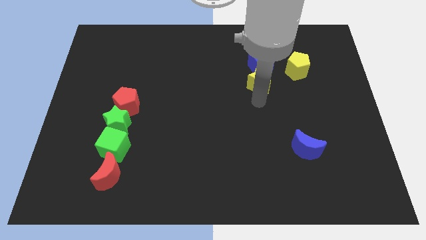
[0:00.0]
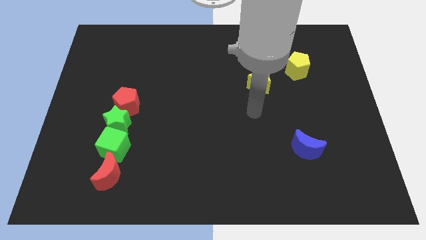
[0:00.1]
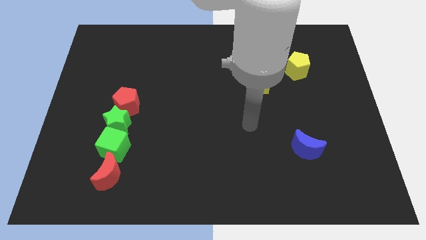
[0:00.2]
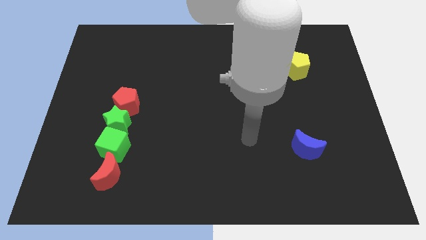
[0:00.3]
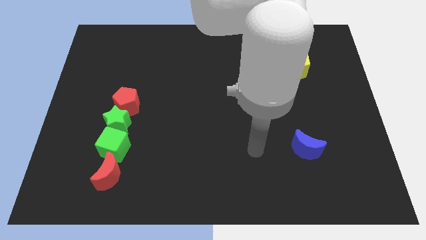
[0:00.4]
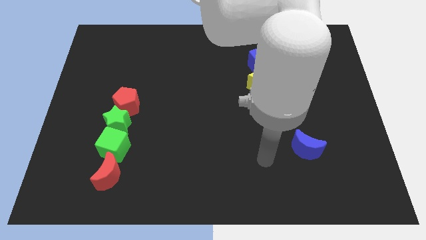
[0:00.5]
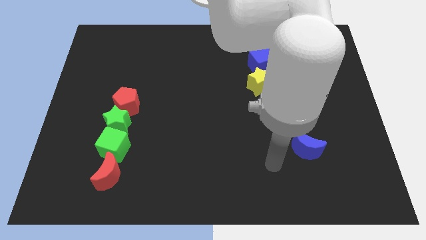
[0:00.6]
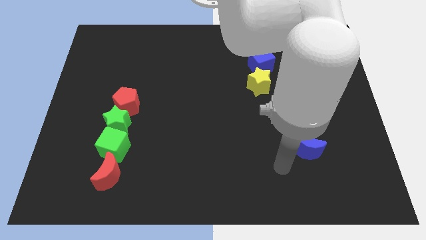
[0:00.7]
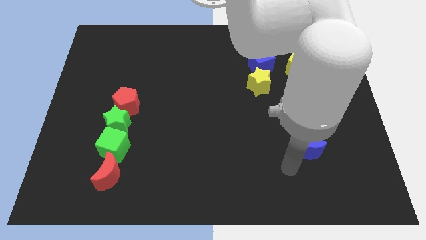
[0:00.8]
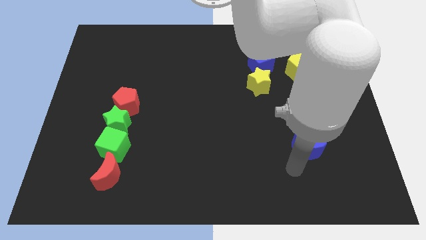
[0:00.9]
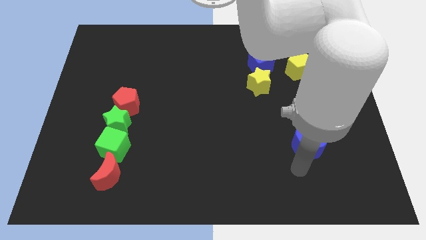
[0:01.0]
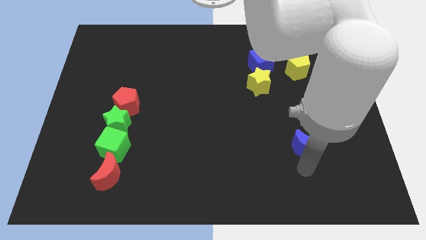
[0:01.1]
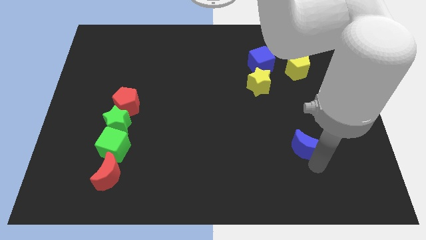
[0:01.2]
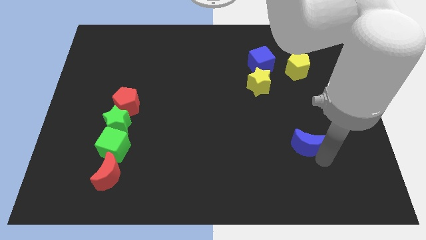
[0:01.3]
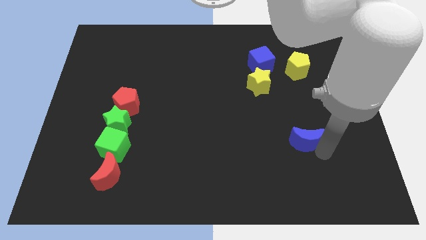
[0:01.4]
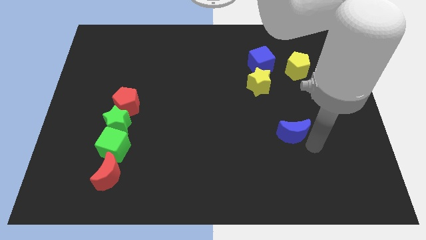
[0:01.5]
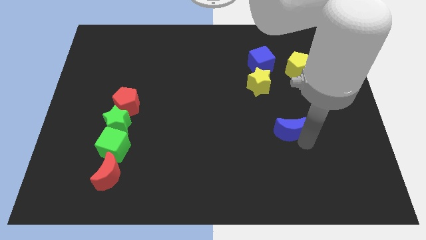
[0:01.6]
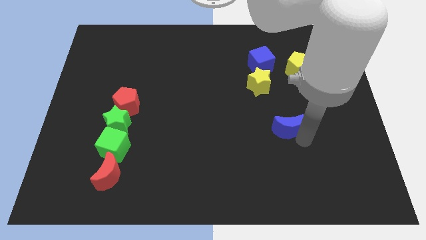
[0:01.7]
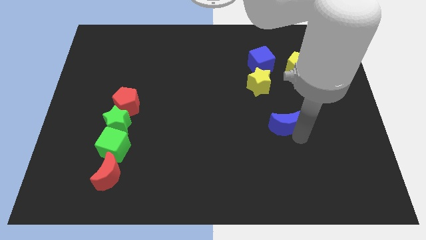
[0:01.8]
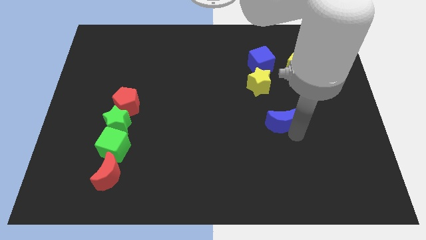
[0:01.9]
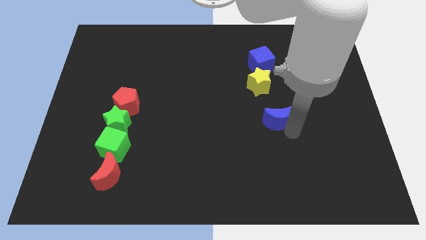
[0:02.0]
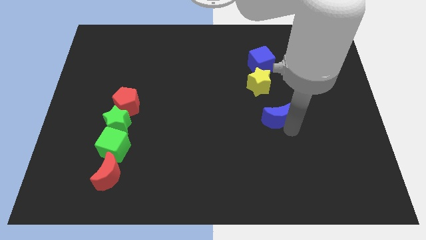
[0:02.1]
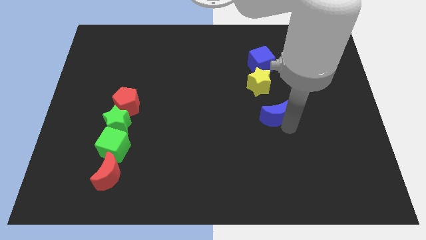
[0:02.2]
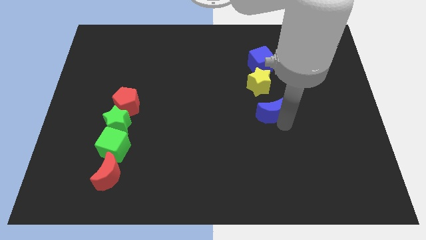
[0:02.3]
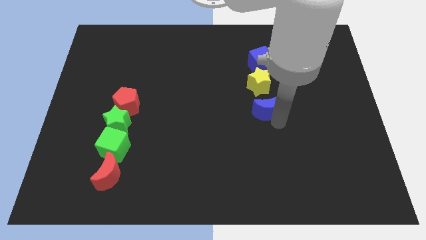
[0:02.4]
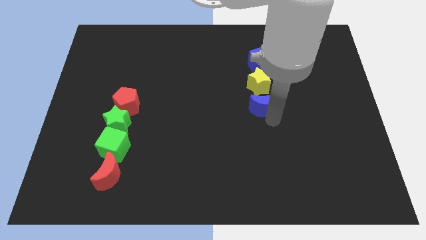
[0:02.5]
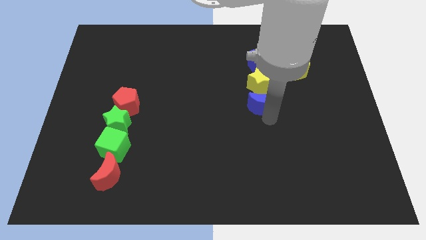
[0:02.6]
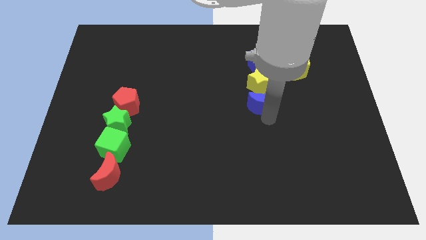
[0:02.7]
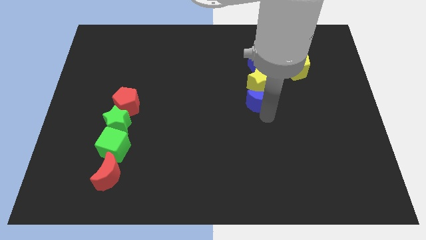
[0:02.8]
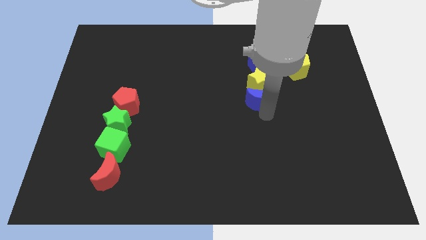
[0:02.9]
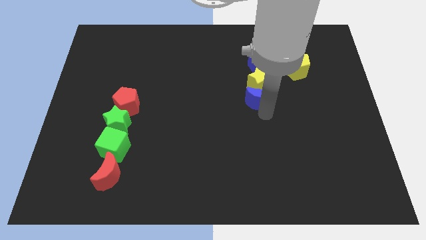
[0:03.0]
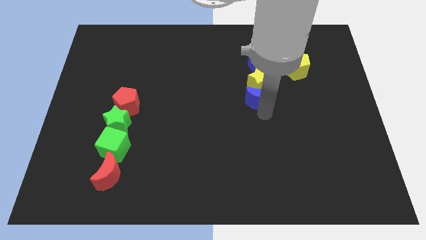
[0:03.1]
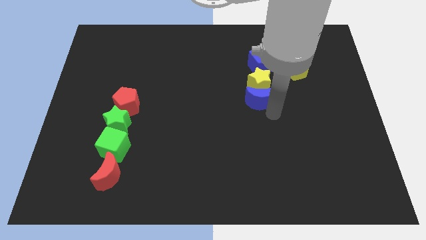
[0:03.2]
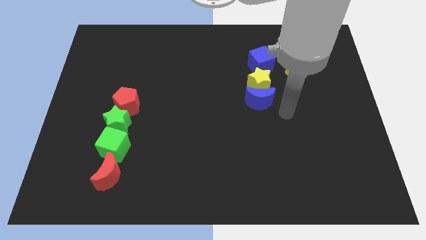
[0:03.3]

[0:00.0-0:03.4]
move the blue crescent to the bottom of the yellow star

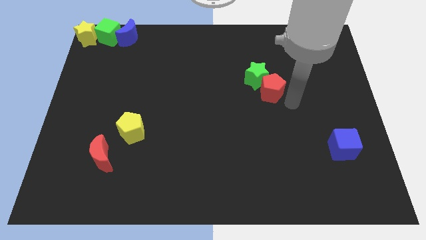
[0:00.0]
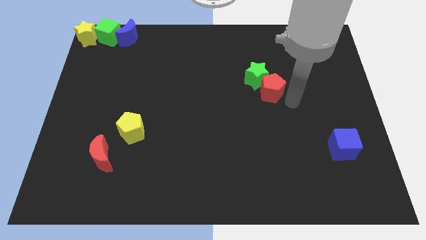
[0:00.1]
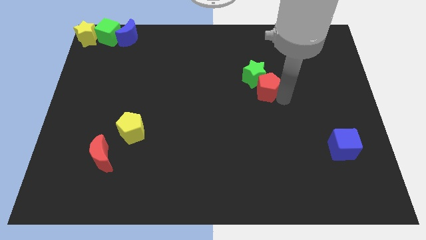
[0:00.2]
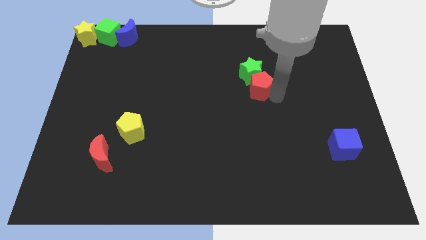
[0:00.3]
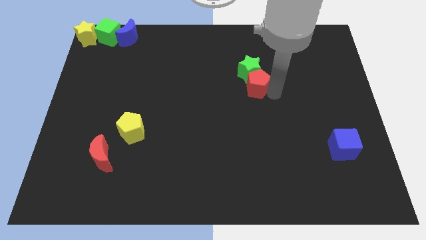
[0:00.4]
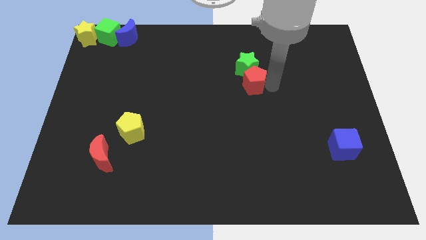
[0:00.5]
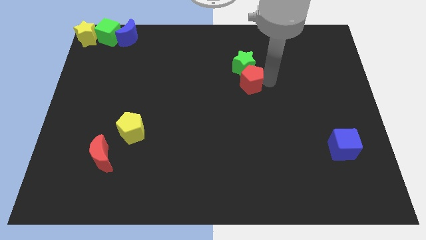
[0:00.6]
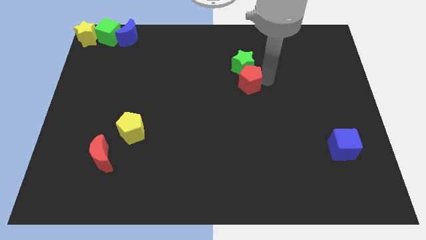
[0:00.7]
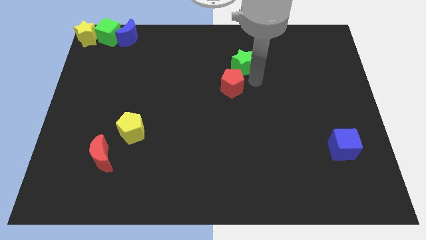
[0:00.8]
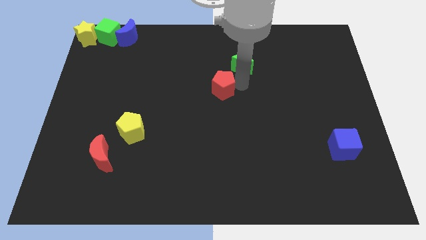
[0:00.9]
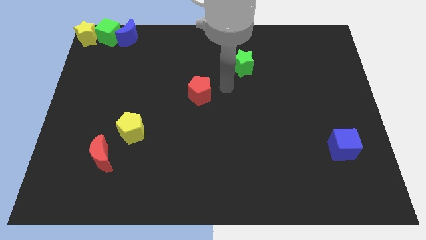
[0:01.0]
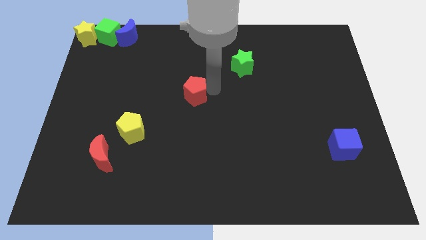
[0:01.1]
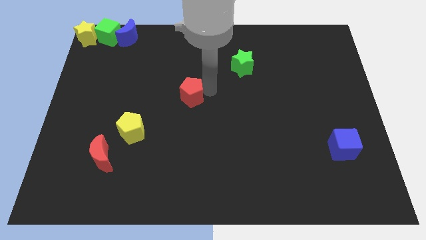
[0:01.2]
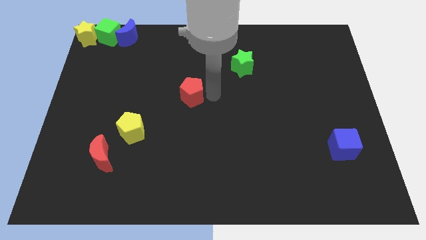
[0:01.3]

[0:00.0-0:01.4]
separate the red pentagon from the green star

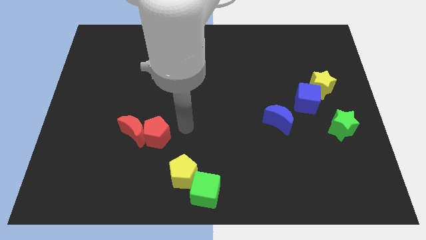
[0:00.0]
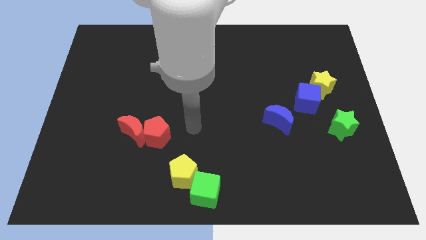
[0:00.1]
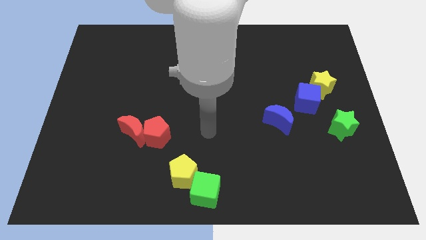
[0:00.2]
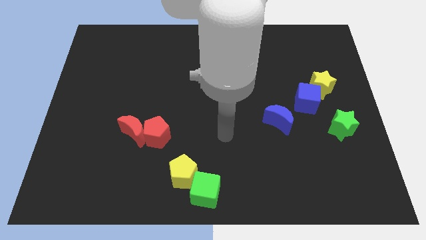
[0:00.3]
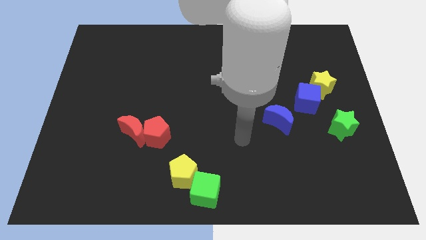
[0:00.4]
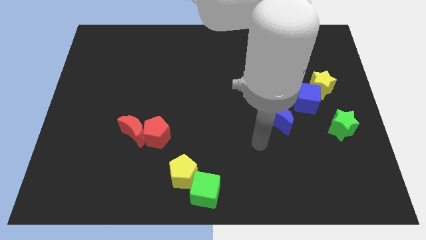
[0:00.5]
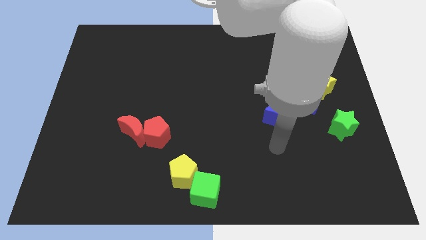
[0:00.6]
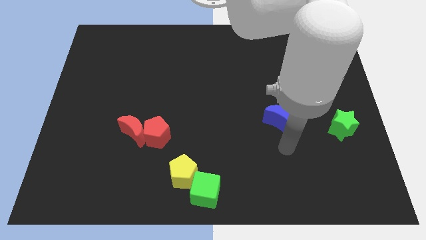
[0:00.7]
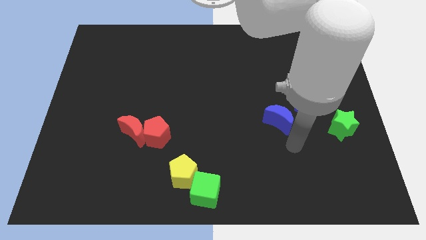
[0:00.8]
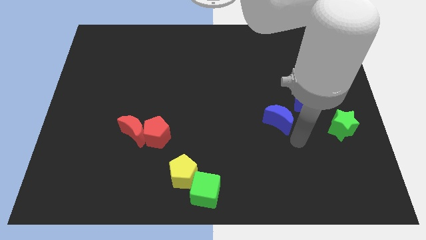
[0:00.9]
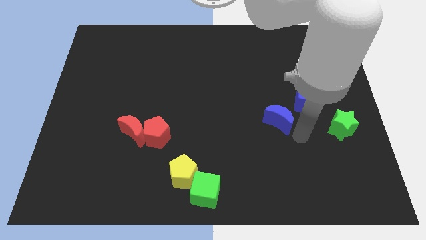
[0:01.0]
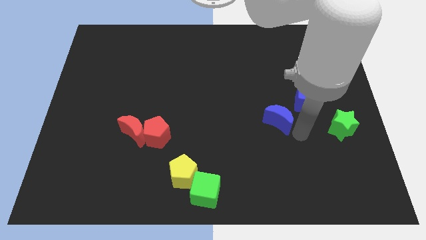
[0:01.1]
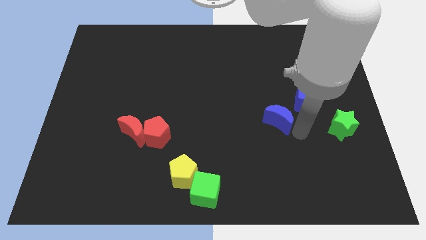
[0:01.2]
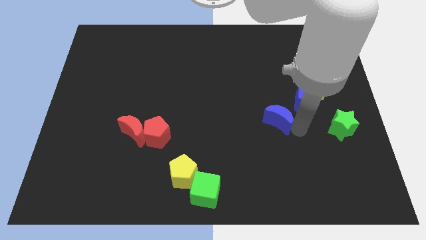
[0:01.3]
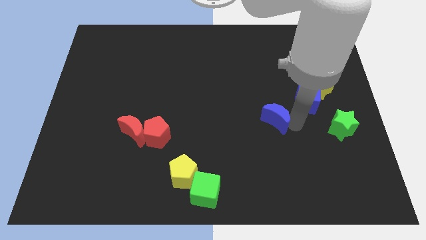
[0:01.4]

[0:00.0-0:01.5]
tap the blue crescent

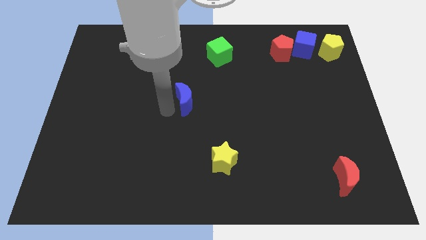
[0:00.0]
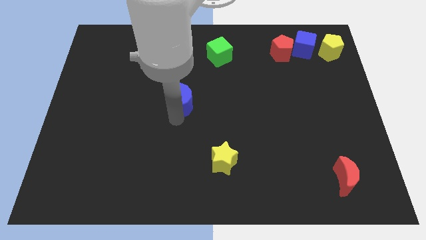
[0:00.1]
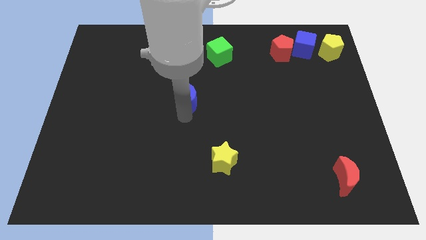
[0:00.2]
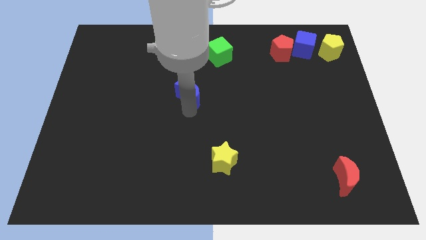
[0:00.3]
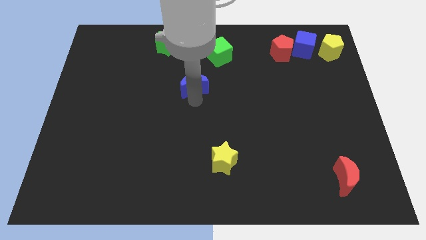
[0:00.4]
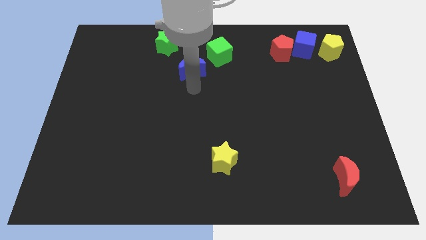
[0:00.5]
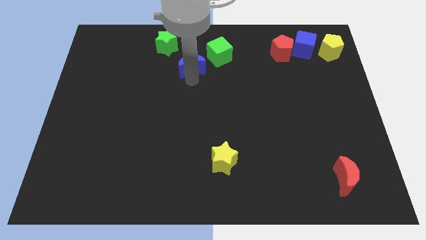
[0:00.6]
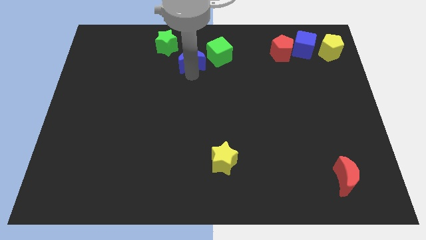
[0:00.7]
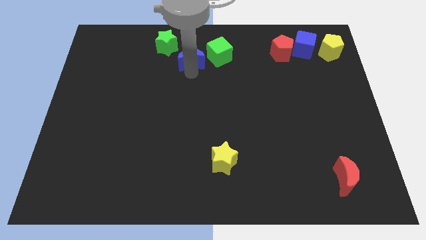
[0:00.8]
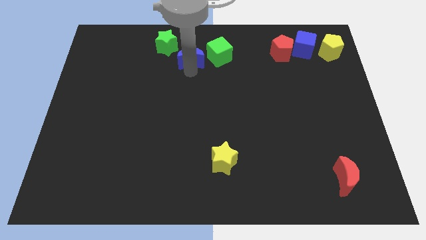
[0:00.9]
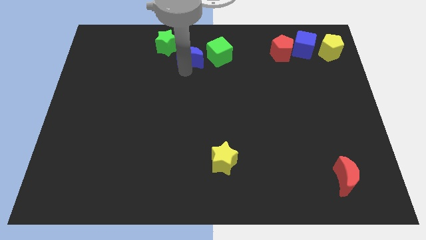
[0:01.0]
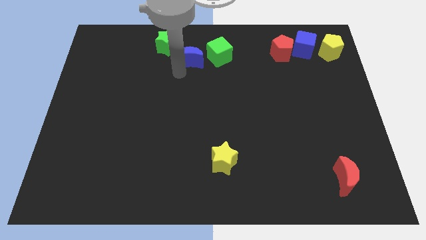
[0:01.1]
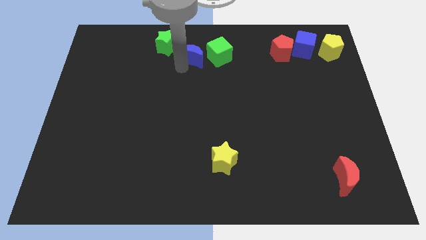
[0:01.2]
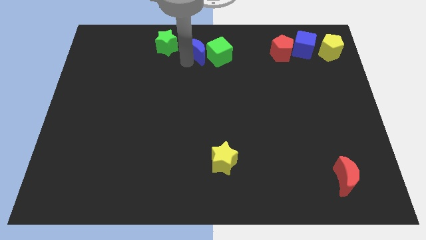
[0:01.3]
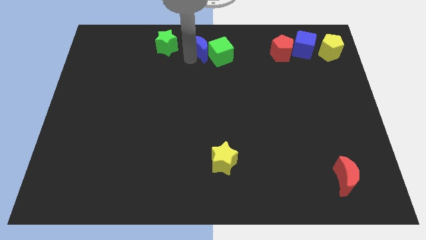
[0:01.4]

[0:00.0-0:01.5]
place the blue moon between green blocks

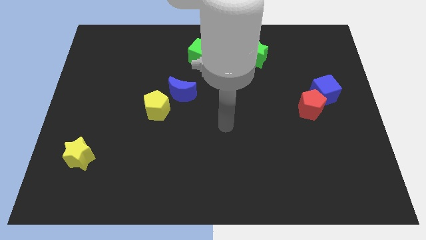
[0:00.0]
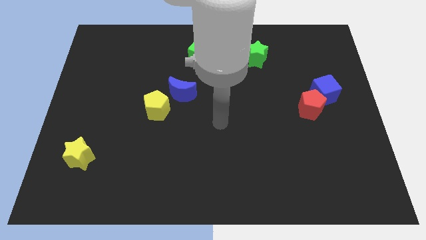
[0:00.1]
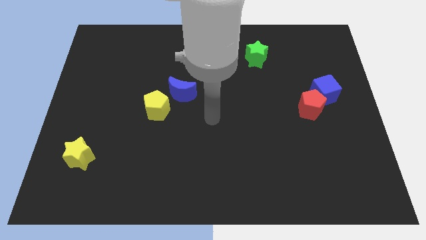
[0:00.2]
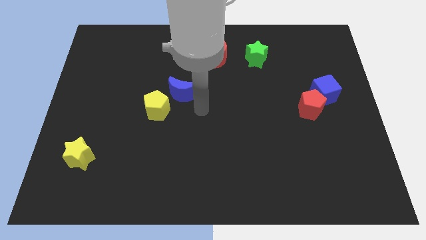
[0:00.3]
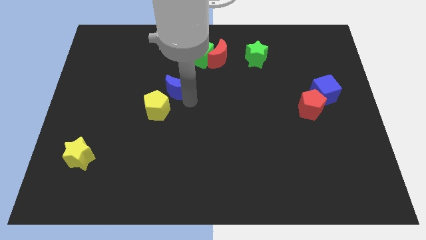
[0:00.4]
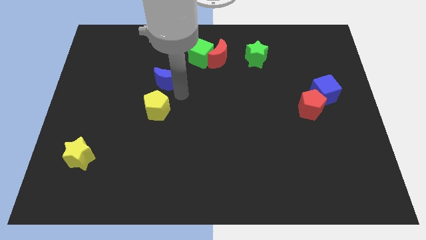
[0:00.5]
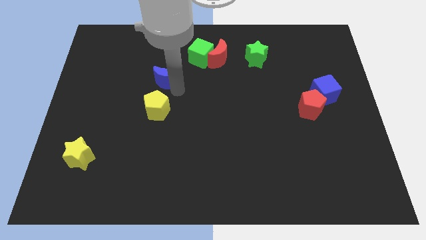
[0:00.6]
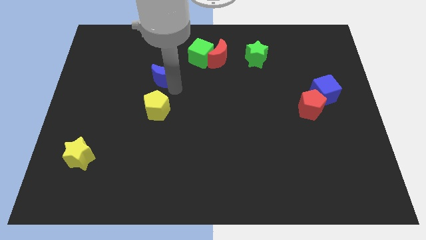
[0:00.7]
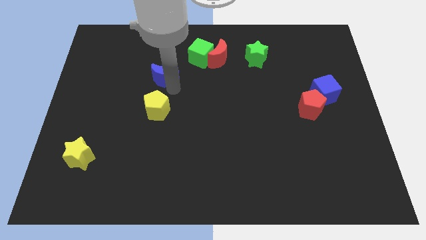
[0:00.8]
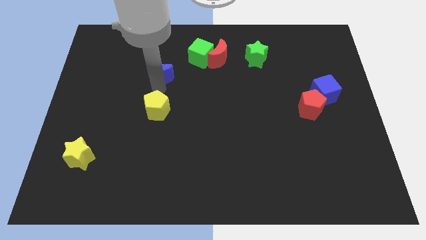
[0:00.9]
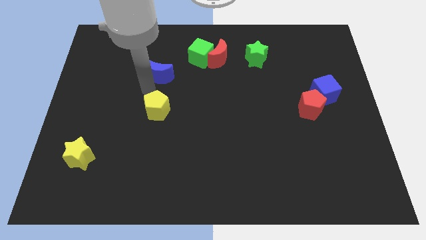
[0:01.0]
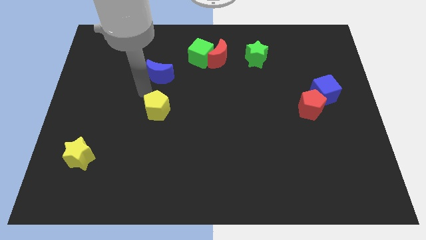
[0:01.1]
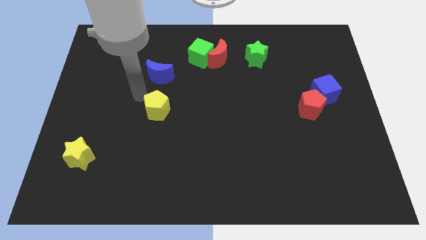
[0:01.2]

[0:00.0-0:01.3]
push the blue crescent slightly upwards of the board
